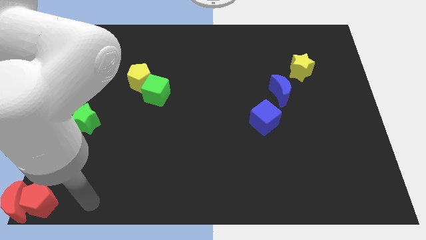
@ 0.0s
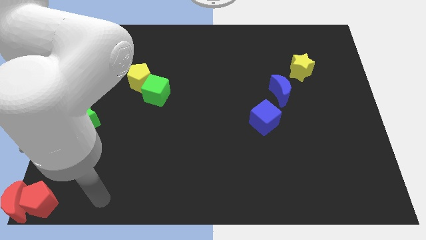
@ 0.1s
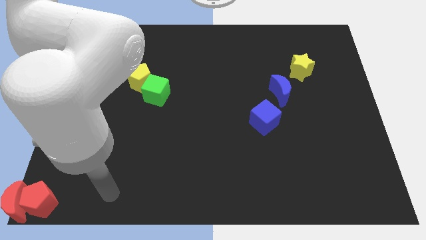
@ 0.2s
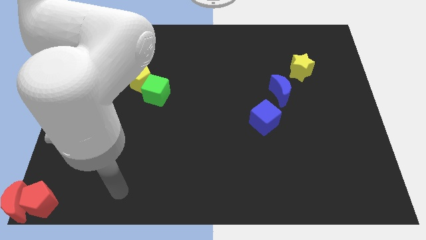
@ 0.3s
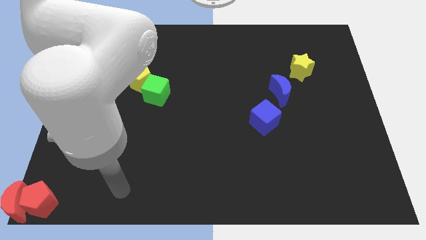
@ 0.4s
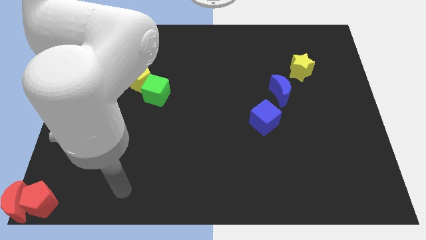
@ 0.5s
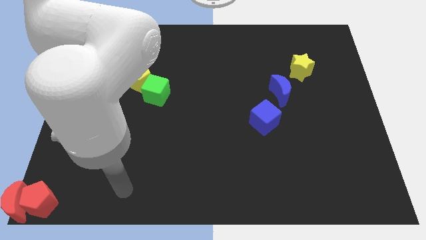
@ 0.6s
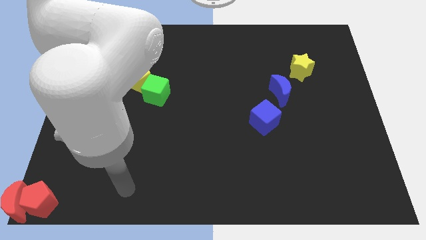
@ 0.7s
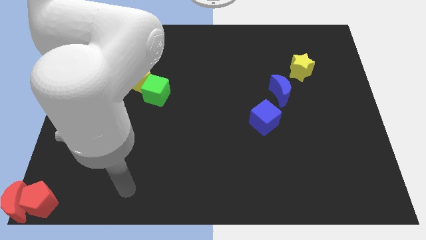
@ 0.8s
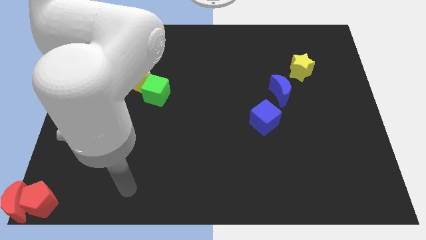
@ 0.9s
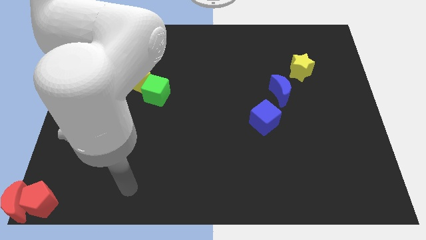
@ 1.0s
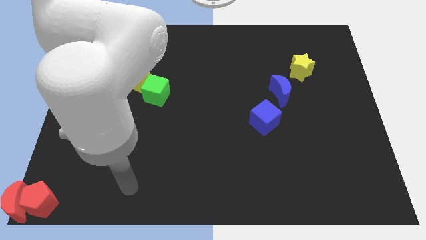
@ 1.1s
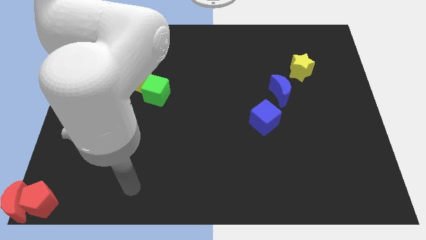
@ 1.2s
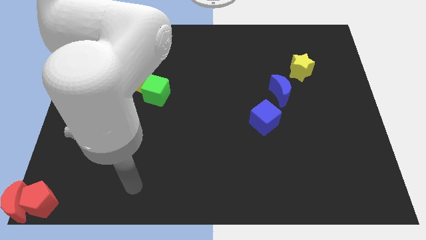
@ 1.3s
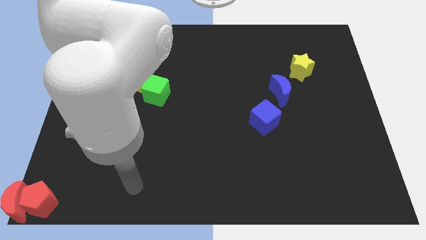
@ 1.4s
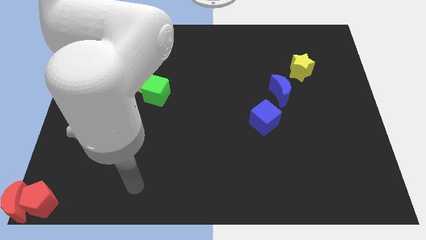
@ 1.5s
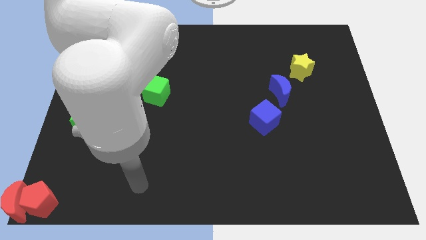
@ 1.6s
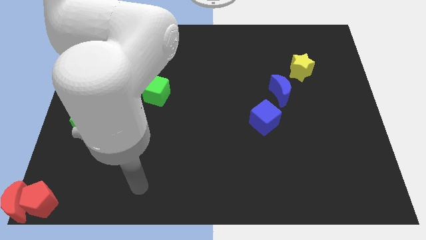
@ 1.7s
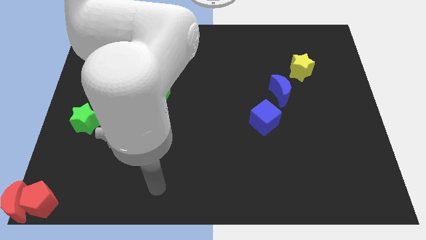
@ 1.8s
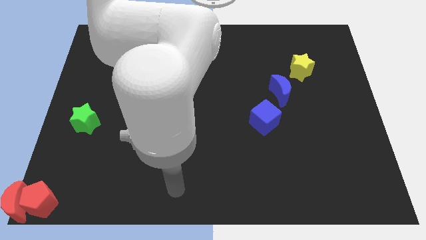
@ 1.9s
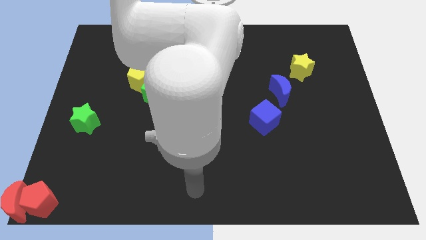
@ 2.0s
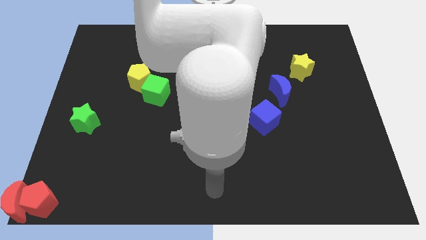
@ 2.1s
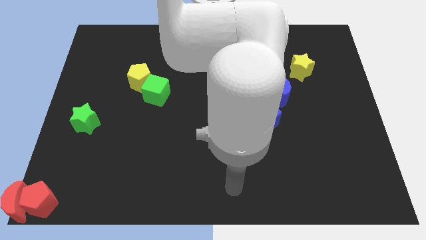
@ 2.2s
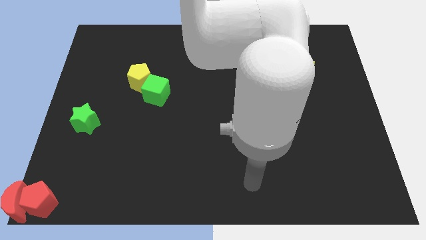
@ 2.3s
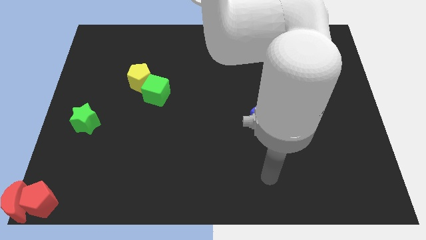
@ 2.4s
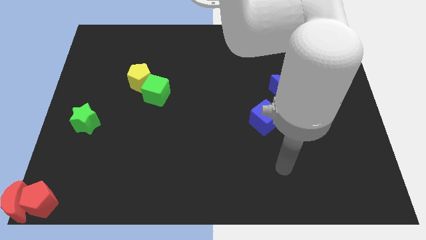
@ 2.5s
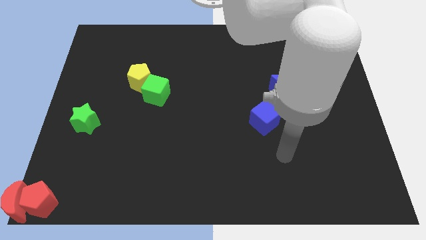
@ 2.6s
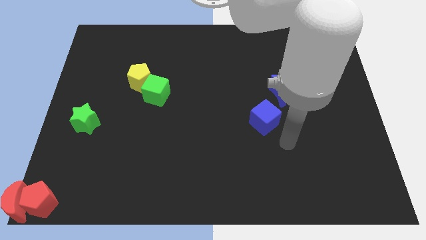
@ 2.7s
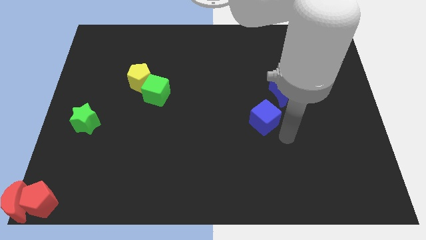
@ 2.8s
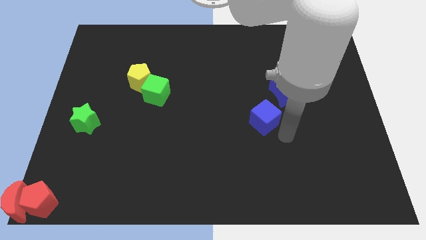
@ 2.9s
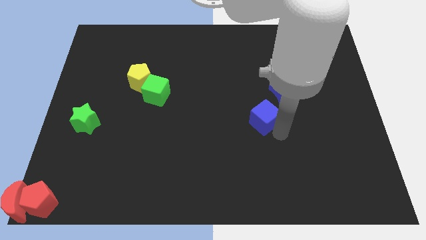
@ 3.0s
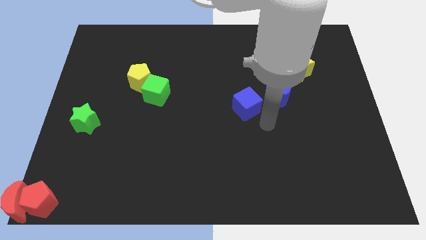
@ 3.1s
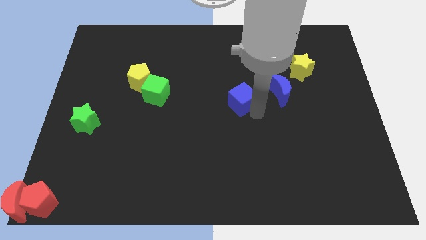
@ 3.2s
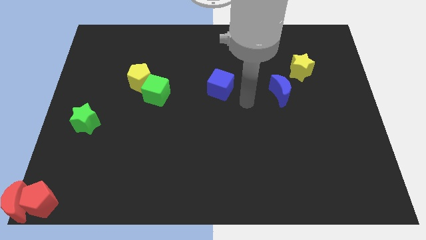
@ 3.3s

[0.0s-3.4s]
move the blue cube parallel left to the blue moon

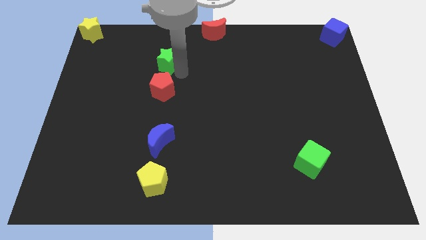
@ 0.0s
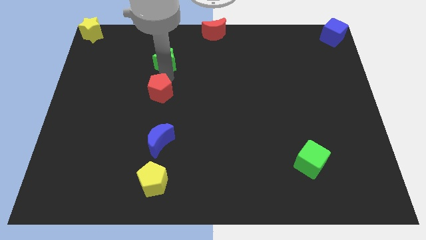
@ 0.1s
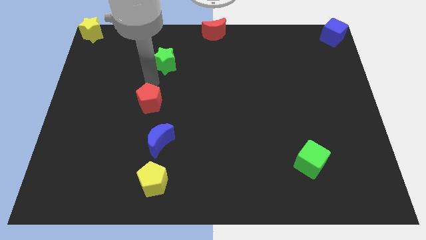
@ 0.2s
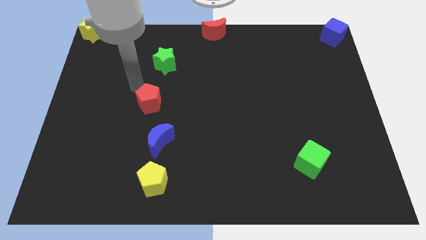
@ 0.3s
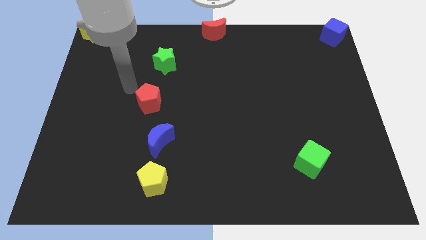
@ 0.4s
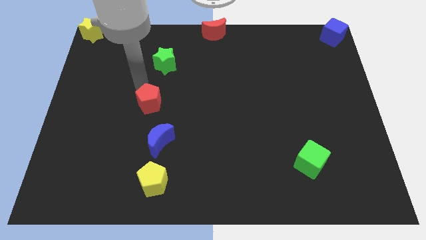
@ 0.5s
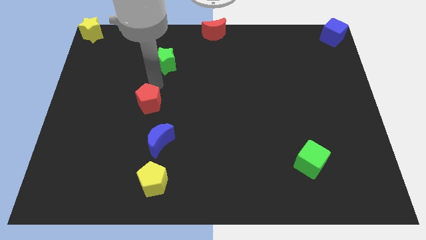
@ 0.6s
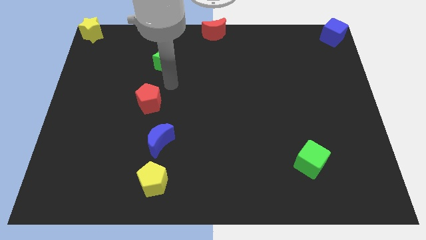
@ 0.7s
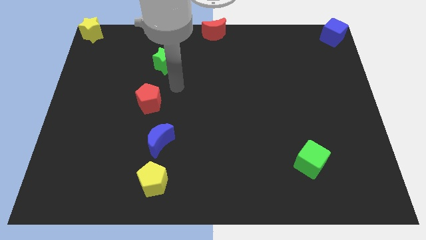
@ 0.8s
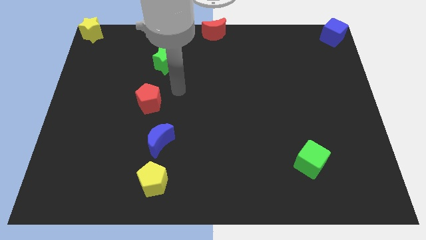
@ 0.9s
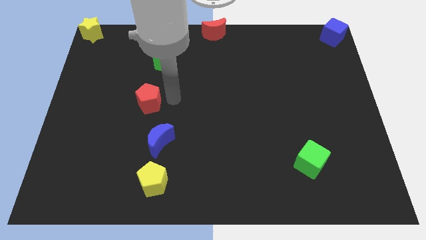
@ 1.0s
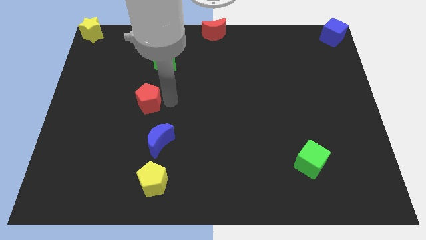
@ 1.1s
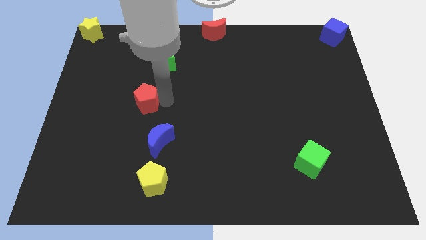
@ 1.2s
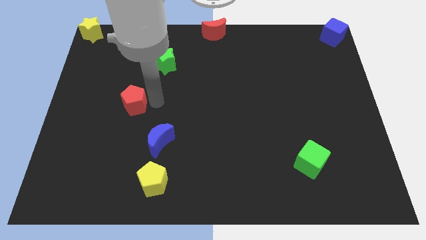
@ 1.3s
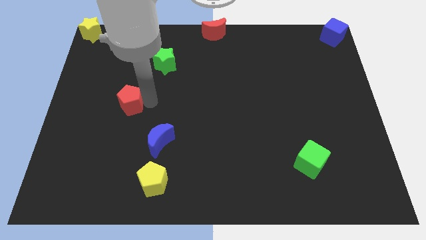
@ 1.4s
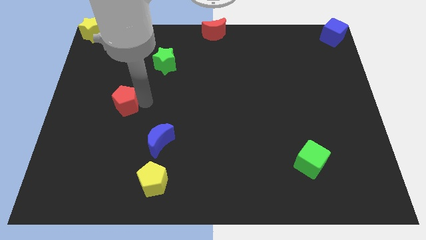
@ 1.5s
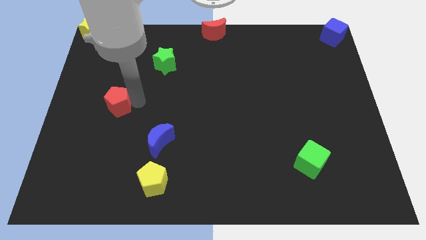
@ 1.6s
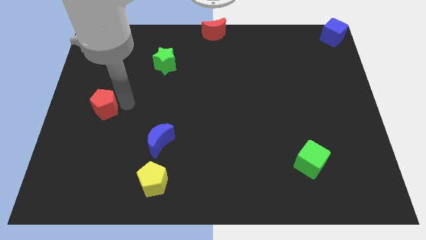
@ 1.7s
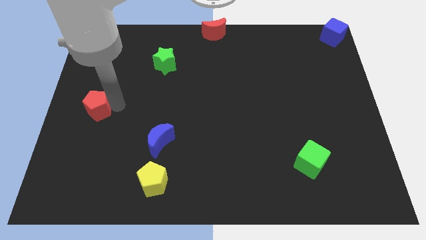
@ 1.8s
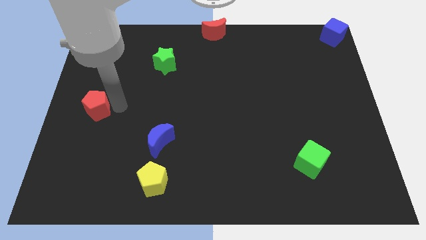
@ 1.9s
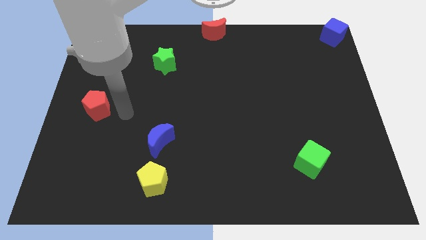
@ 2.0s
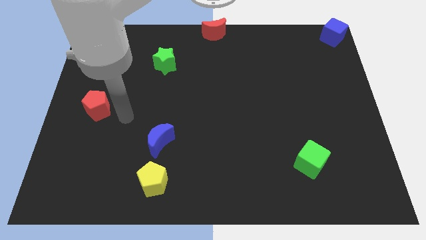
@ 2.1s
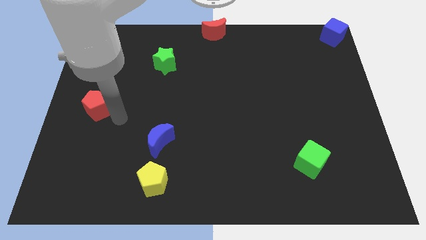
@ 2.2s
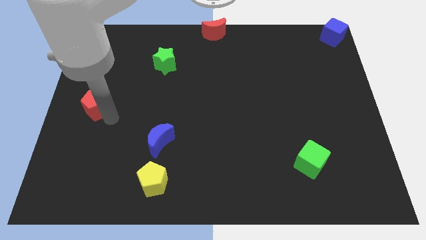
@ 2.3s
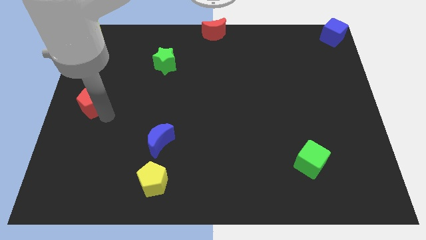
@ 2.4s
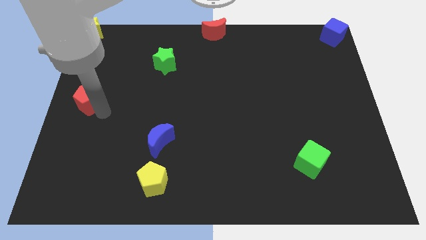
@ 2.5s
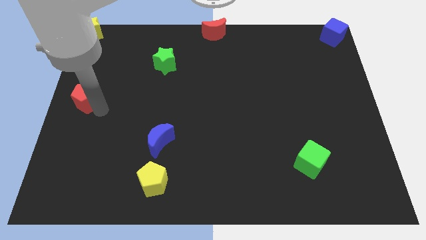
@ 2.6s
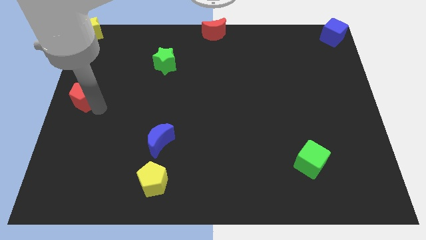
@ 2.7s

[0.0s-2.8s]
move the red pentagon to the center left side

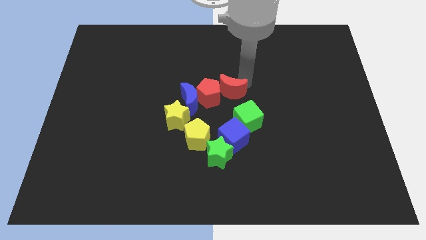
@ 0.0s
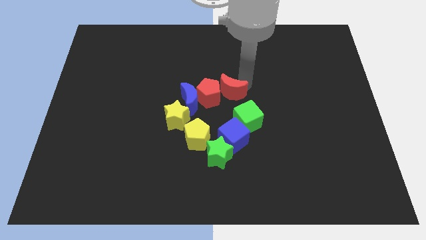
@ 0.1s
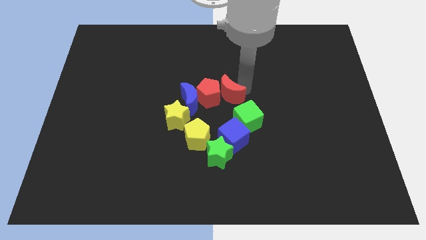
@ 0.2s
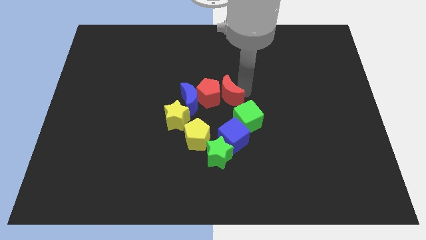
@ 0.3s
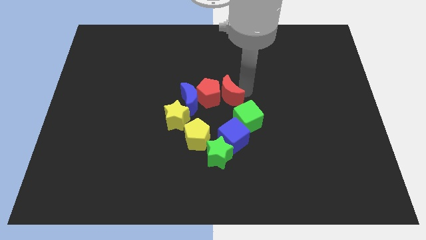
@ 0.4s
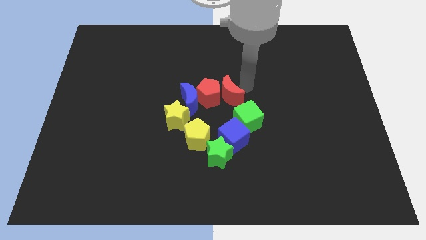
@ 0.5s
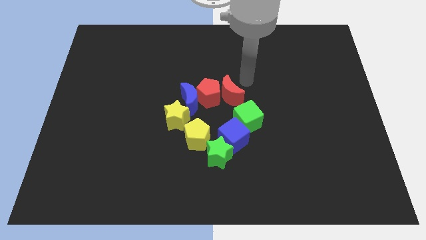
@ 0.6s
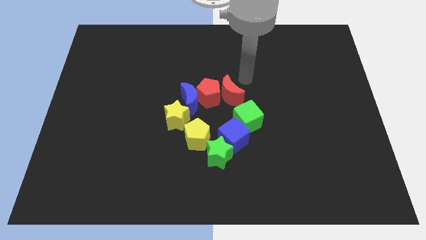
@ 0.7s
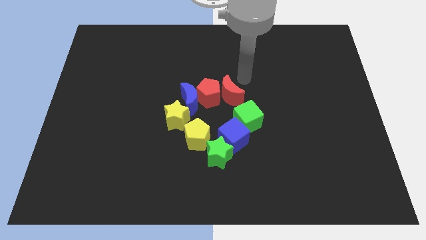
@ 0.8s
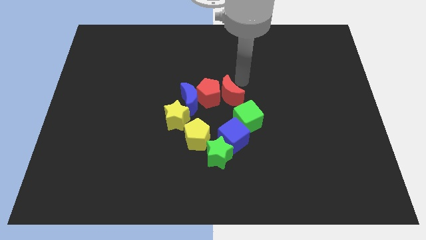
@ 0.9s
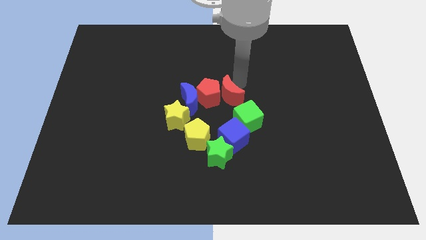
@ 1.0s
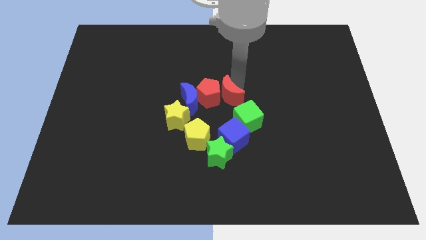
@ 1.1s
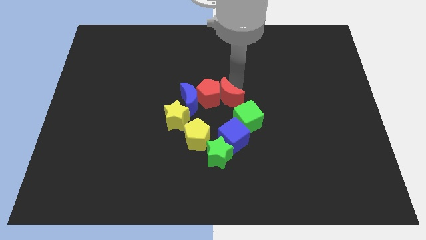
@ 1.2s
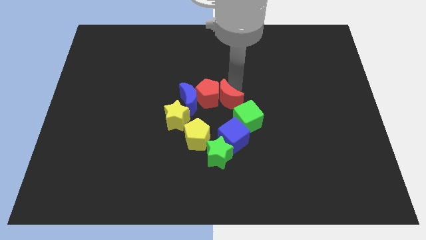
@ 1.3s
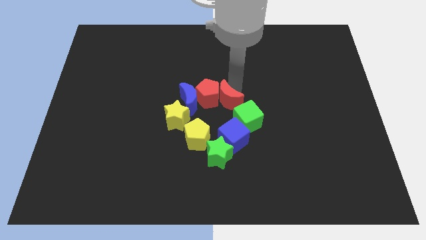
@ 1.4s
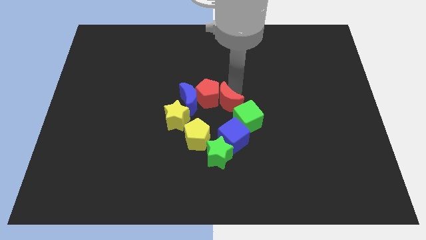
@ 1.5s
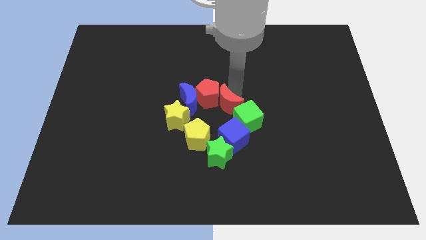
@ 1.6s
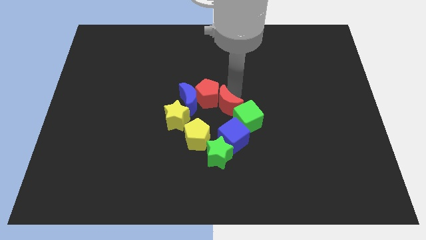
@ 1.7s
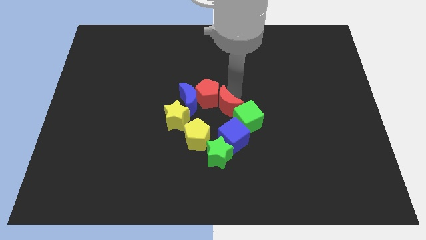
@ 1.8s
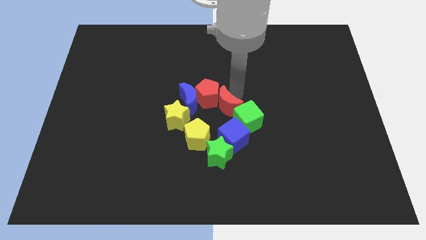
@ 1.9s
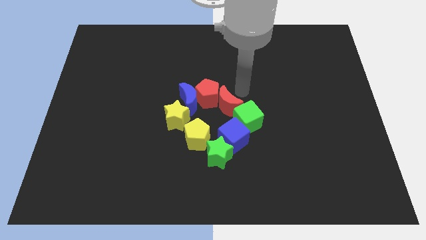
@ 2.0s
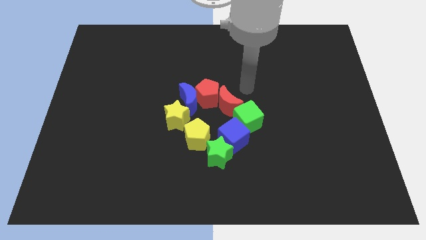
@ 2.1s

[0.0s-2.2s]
move the red crescent in between red pentagon and green cube

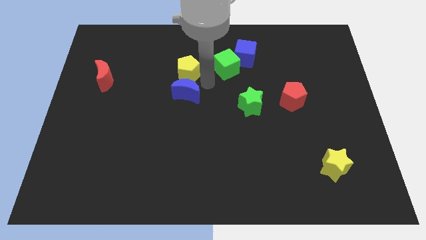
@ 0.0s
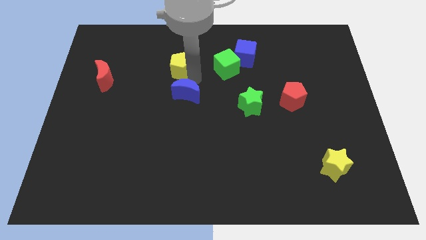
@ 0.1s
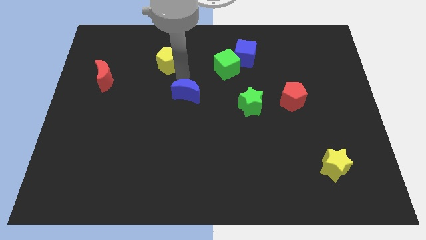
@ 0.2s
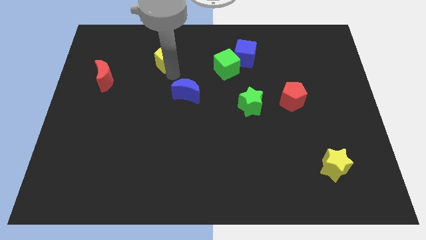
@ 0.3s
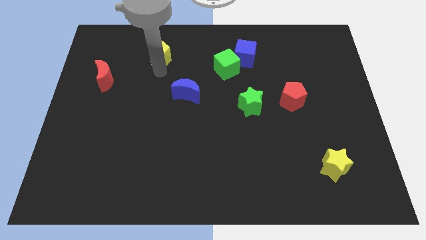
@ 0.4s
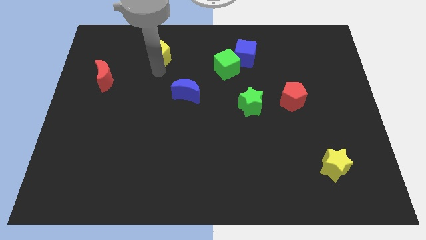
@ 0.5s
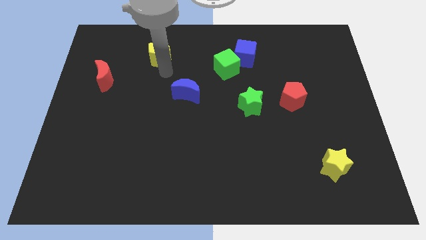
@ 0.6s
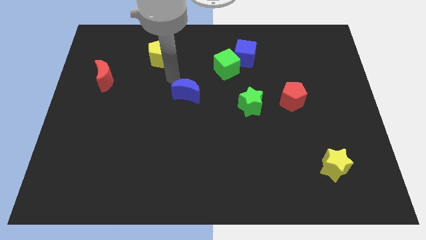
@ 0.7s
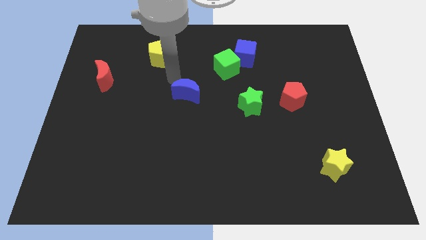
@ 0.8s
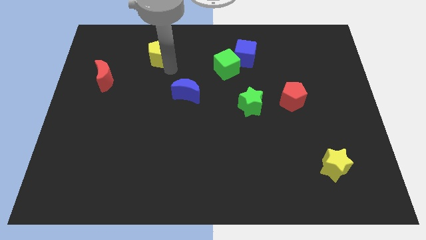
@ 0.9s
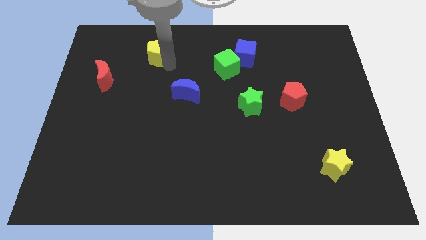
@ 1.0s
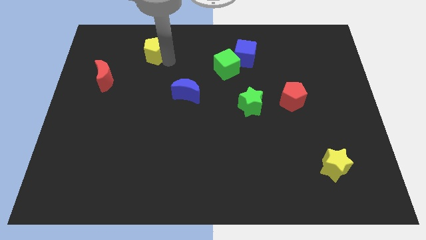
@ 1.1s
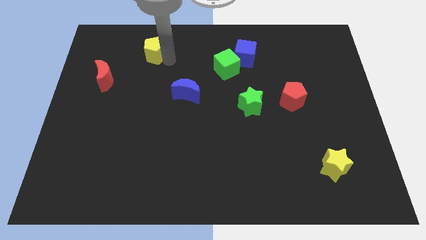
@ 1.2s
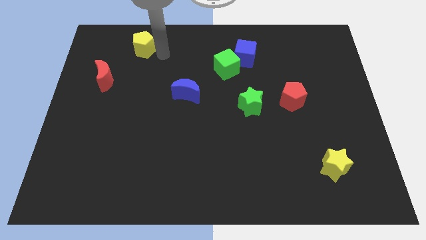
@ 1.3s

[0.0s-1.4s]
separate yellow pentagon from the blue moon
